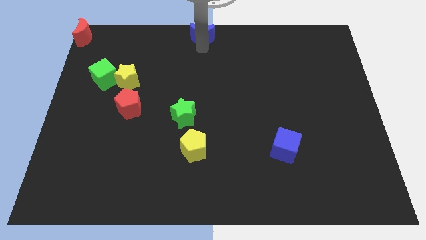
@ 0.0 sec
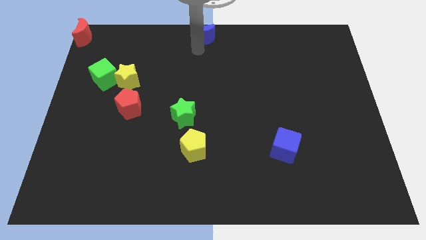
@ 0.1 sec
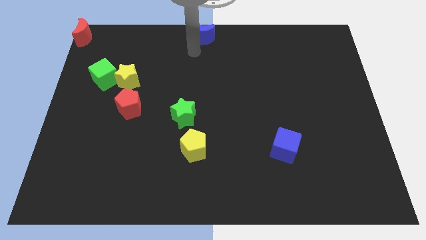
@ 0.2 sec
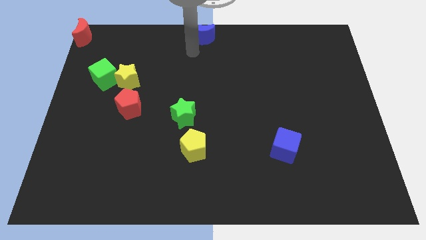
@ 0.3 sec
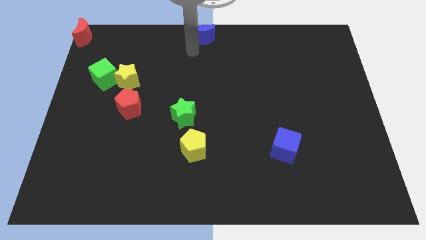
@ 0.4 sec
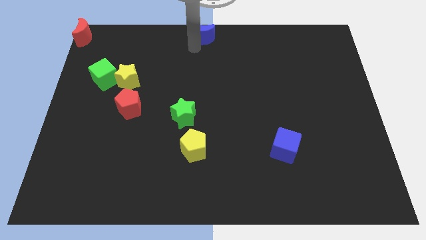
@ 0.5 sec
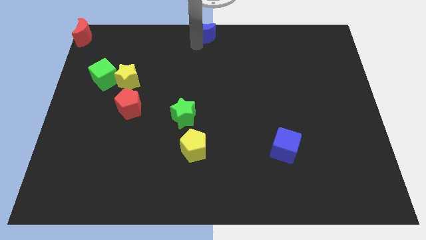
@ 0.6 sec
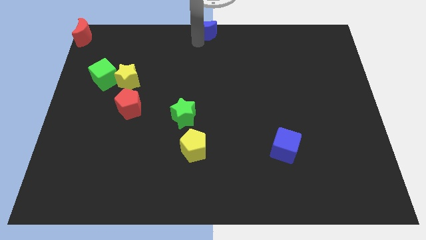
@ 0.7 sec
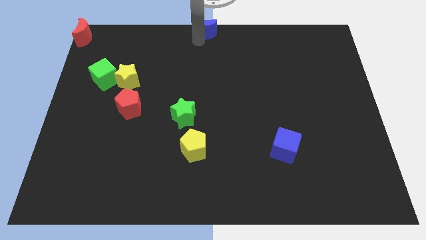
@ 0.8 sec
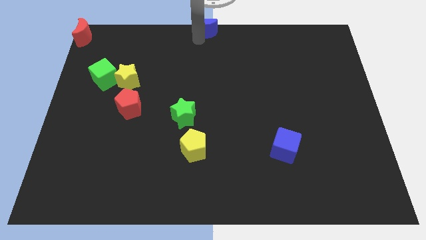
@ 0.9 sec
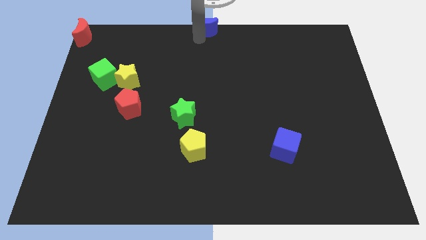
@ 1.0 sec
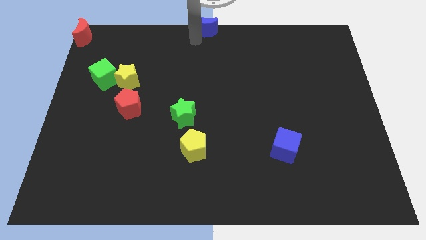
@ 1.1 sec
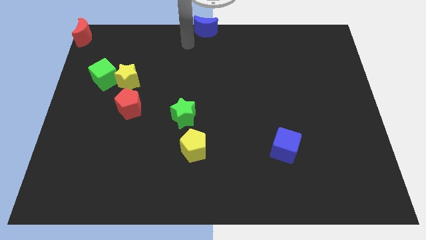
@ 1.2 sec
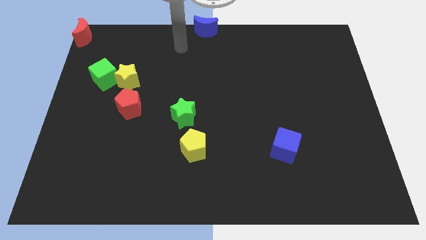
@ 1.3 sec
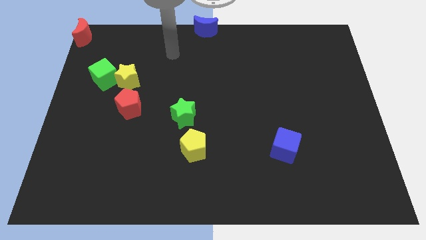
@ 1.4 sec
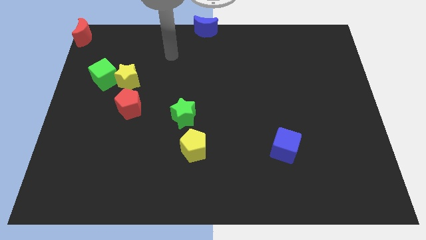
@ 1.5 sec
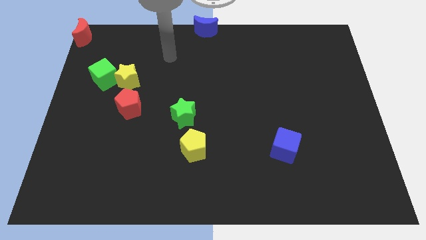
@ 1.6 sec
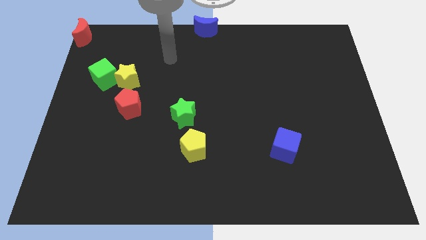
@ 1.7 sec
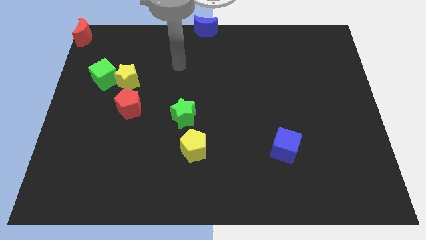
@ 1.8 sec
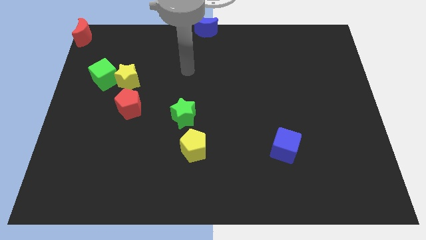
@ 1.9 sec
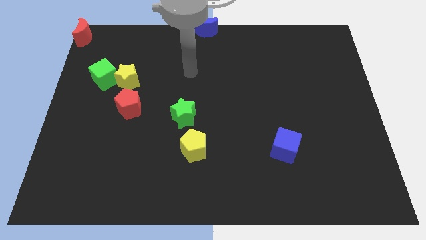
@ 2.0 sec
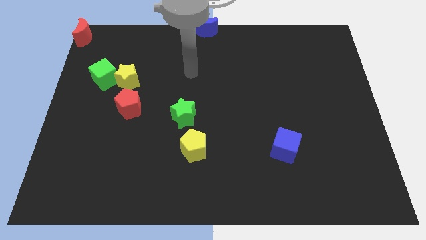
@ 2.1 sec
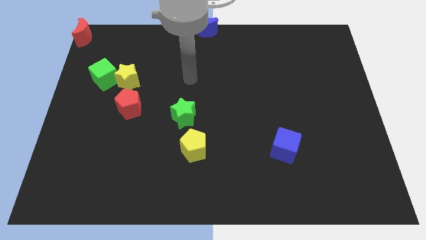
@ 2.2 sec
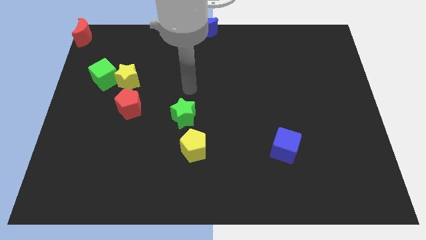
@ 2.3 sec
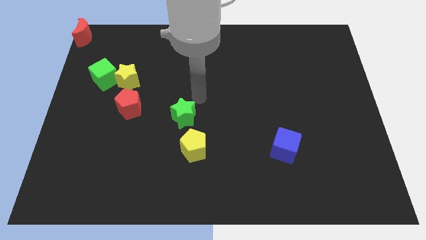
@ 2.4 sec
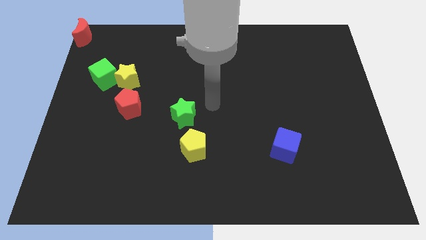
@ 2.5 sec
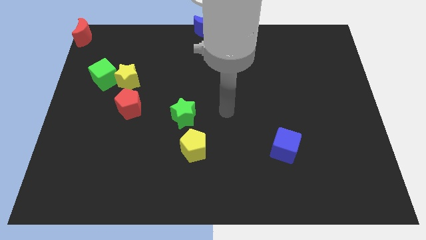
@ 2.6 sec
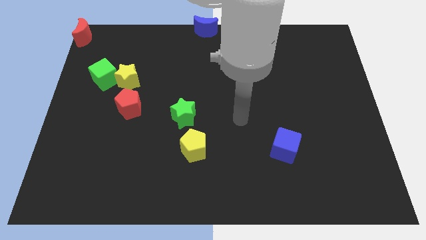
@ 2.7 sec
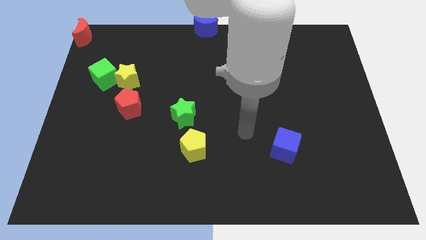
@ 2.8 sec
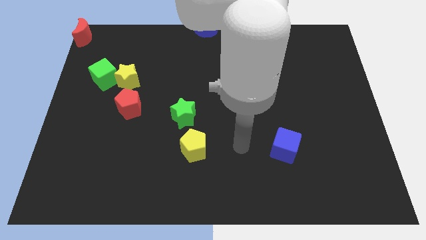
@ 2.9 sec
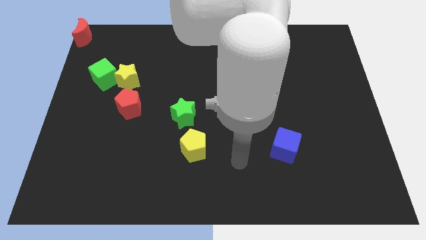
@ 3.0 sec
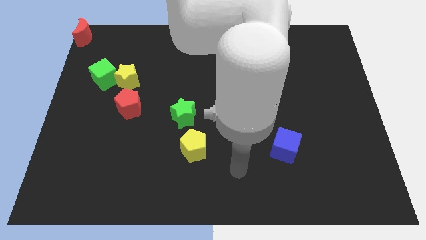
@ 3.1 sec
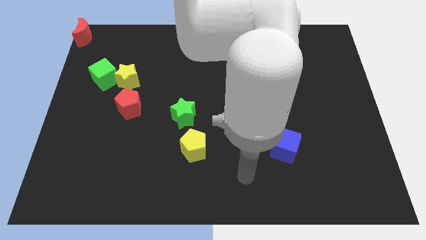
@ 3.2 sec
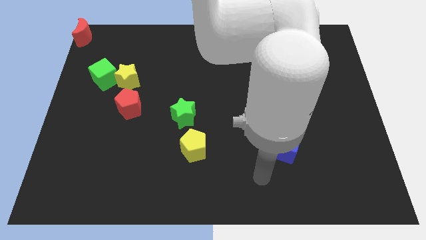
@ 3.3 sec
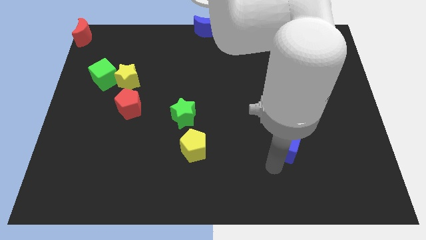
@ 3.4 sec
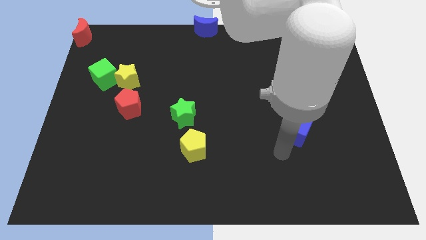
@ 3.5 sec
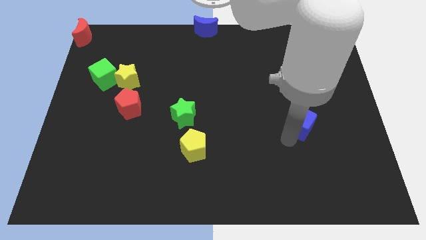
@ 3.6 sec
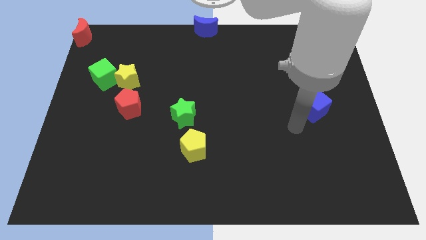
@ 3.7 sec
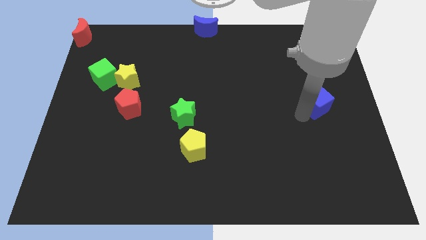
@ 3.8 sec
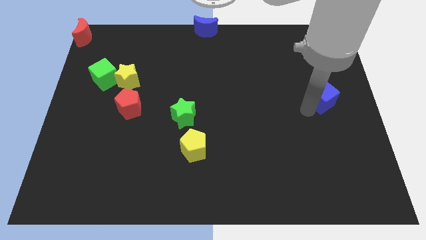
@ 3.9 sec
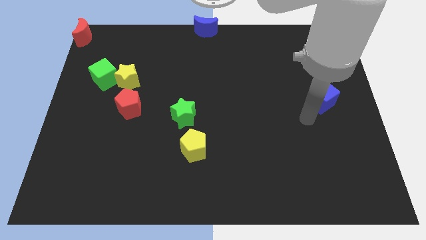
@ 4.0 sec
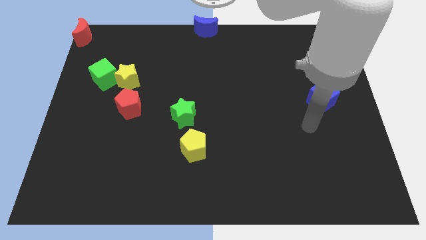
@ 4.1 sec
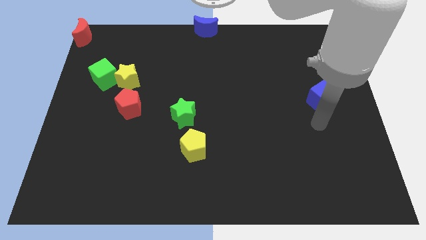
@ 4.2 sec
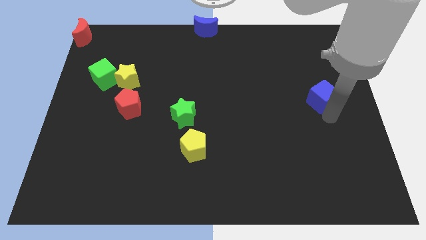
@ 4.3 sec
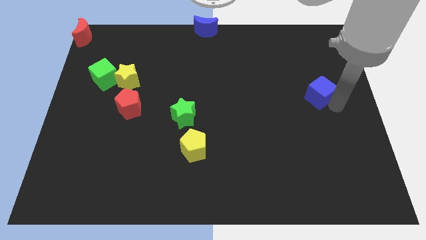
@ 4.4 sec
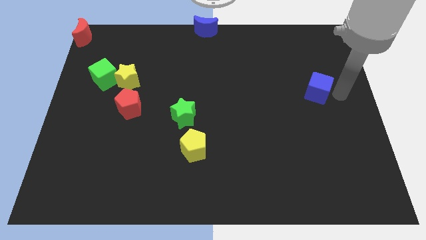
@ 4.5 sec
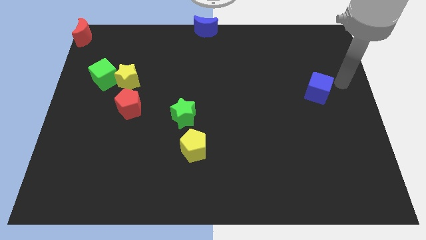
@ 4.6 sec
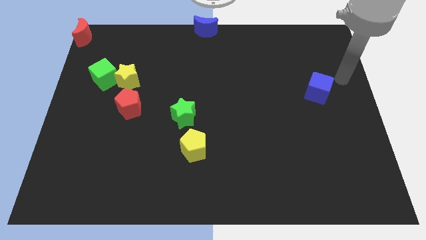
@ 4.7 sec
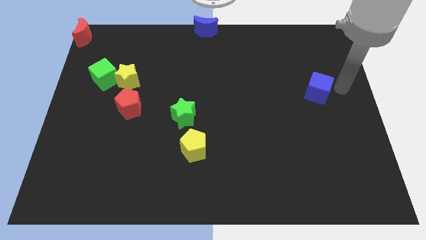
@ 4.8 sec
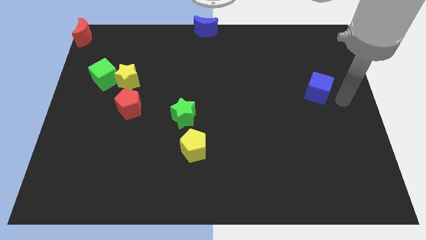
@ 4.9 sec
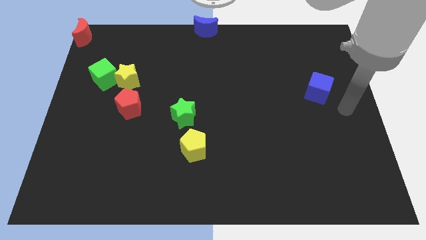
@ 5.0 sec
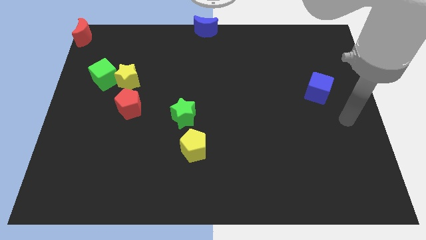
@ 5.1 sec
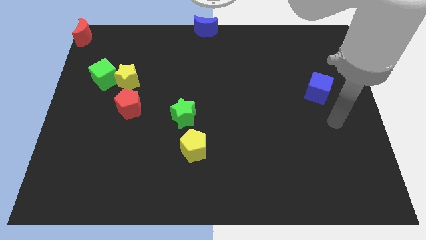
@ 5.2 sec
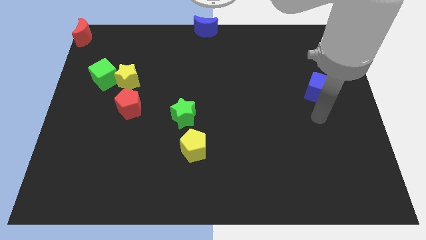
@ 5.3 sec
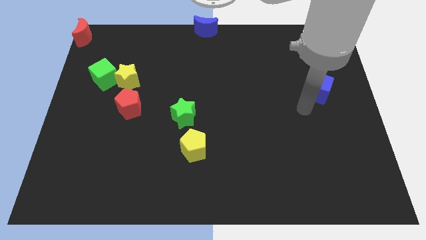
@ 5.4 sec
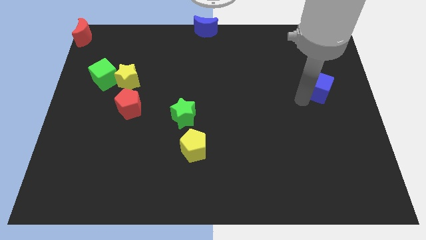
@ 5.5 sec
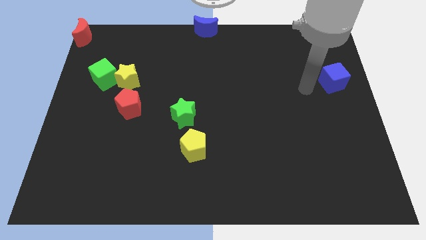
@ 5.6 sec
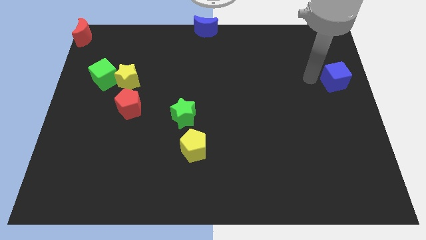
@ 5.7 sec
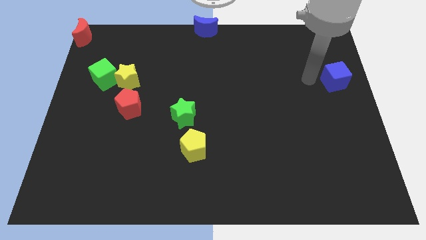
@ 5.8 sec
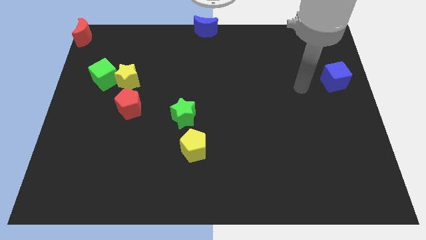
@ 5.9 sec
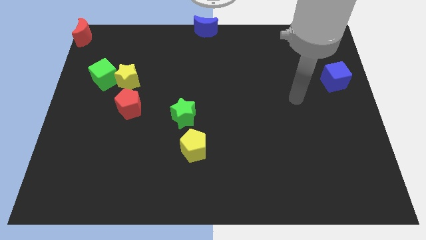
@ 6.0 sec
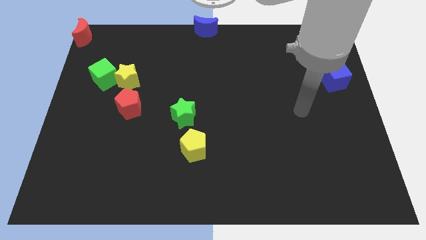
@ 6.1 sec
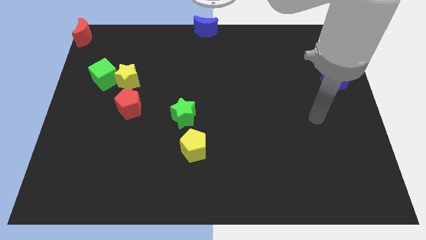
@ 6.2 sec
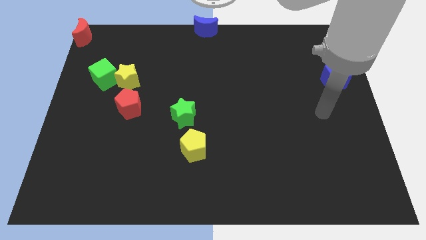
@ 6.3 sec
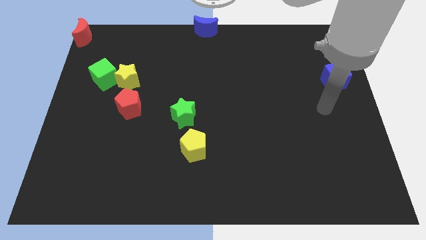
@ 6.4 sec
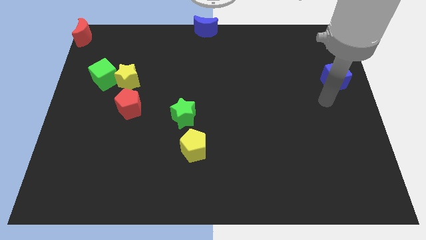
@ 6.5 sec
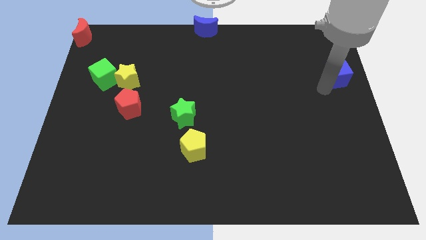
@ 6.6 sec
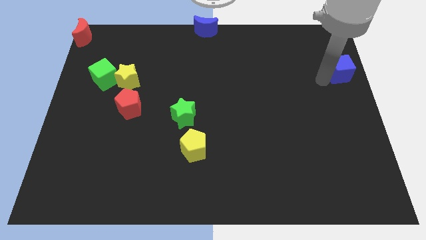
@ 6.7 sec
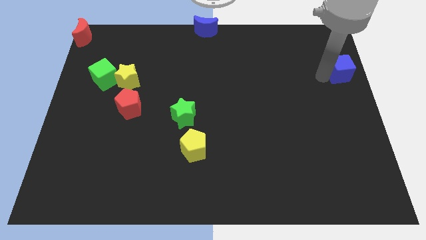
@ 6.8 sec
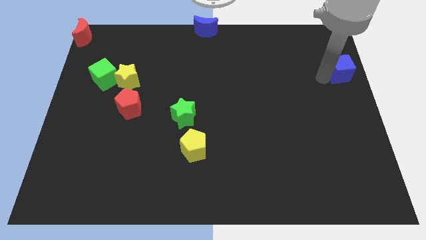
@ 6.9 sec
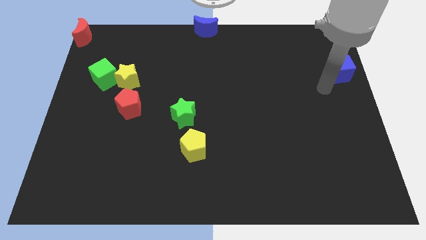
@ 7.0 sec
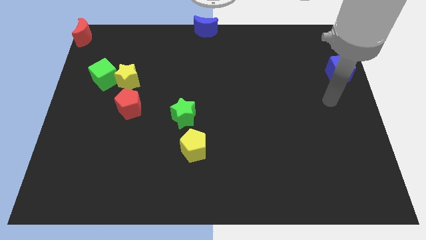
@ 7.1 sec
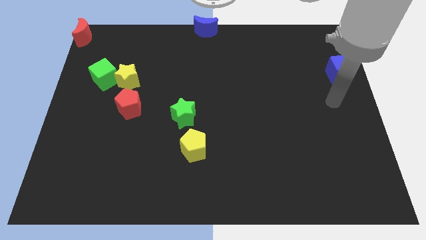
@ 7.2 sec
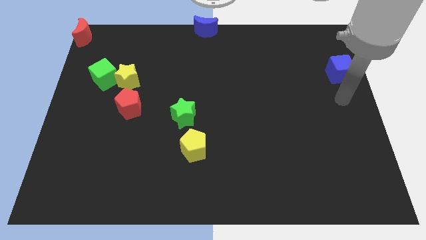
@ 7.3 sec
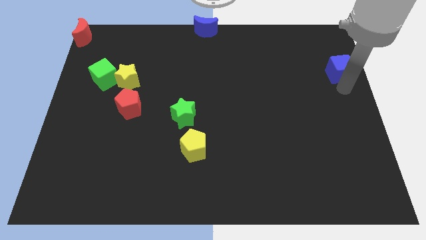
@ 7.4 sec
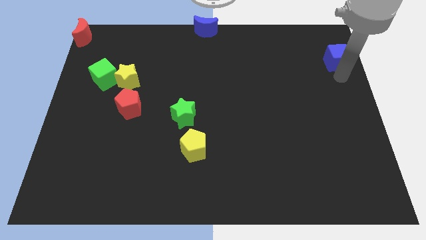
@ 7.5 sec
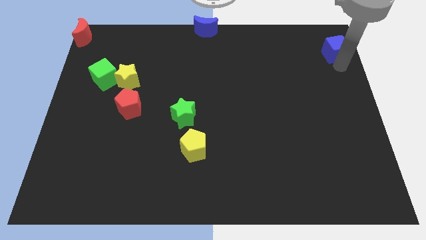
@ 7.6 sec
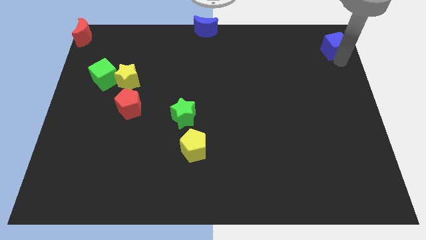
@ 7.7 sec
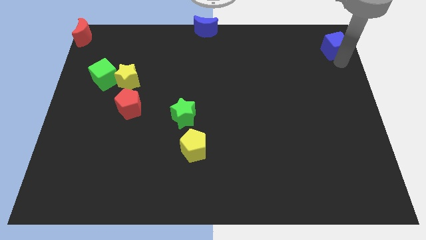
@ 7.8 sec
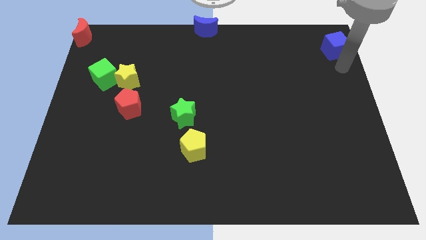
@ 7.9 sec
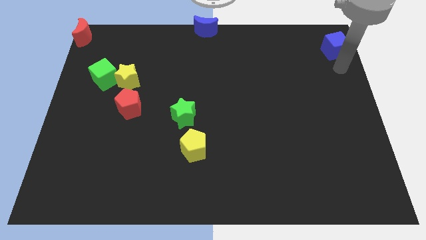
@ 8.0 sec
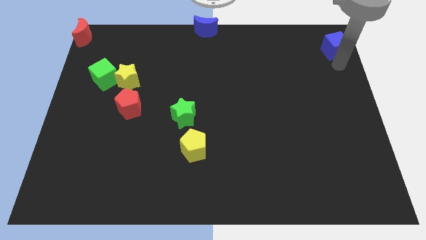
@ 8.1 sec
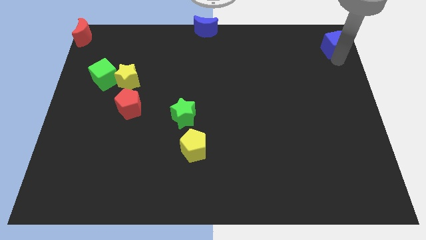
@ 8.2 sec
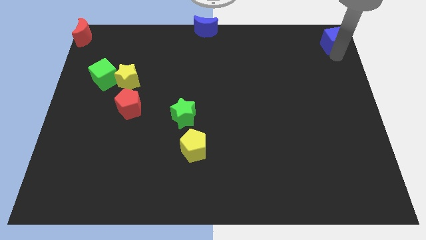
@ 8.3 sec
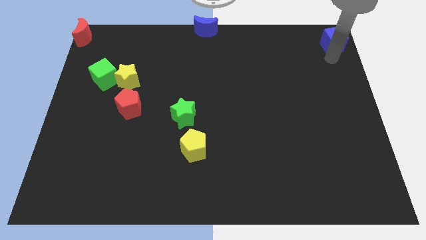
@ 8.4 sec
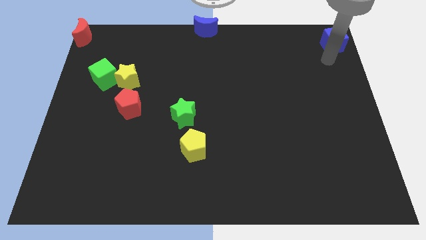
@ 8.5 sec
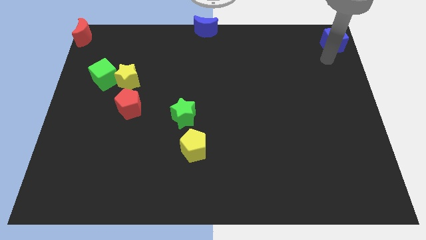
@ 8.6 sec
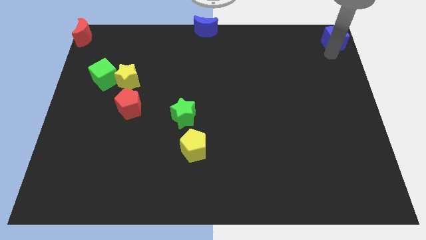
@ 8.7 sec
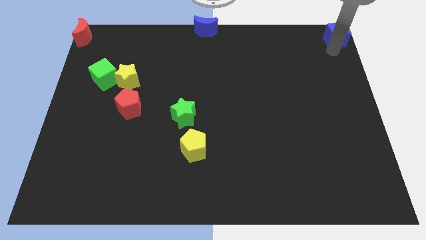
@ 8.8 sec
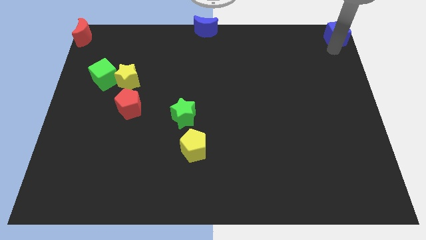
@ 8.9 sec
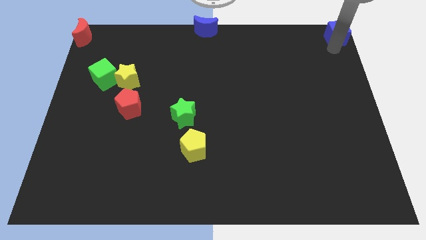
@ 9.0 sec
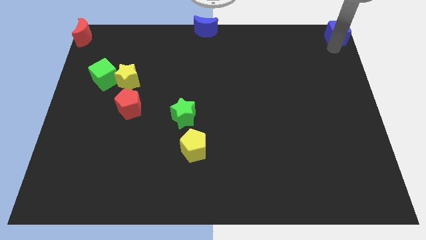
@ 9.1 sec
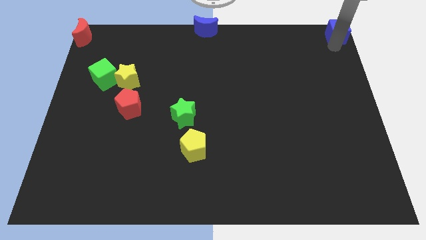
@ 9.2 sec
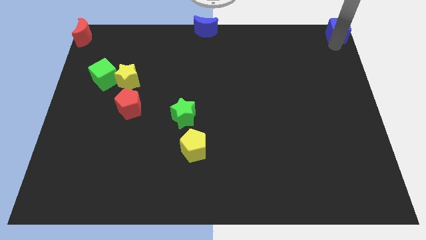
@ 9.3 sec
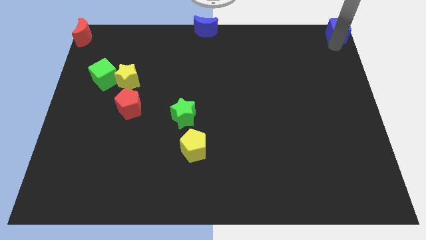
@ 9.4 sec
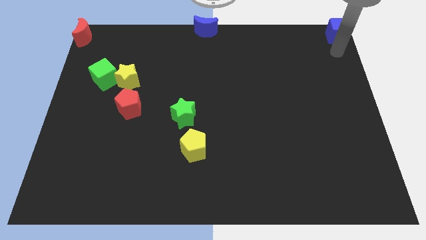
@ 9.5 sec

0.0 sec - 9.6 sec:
push the blue cube to the top right corner of the board
